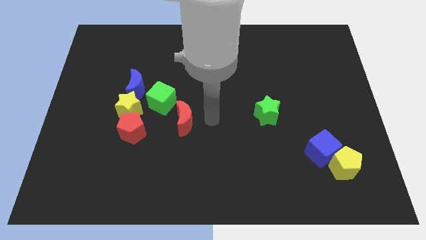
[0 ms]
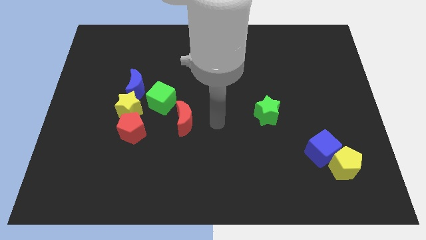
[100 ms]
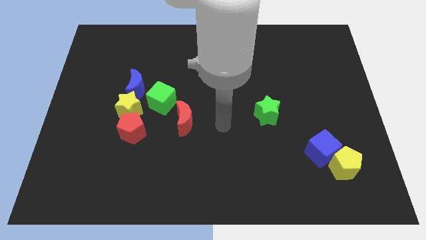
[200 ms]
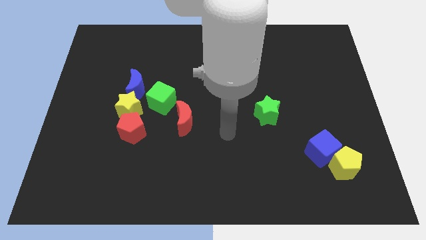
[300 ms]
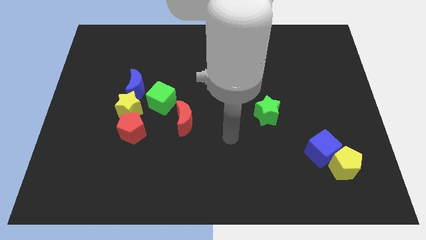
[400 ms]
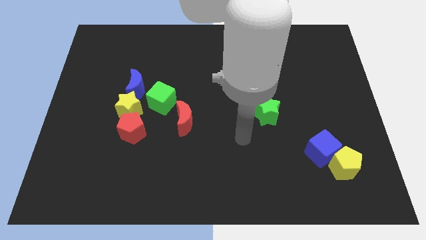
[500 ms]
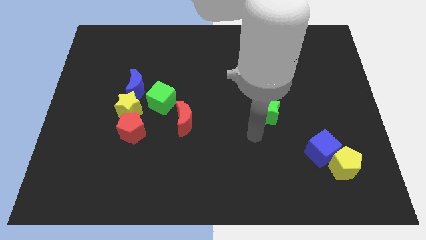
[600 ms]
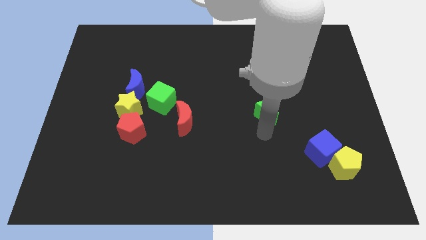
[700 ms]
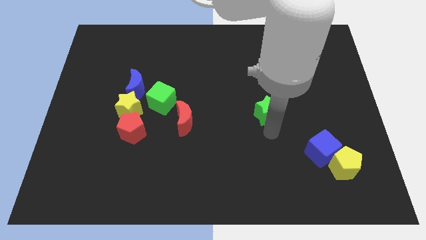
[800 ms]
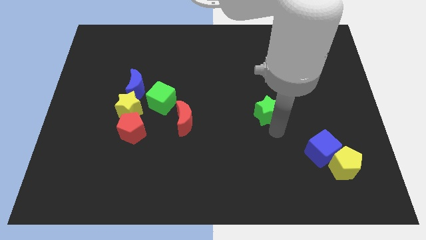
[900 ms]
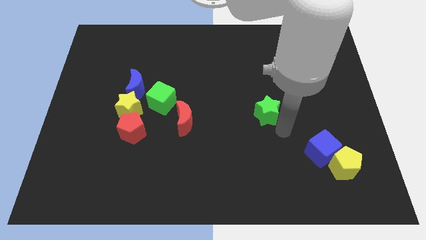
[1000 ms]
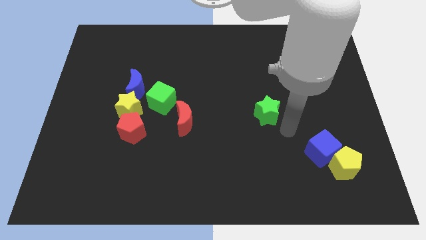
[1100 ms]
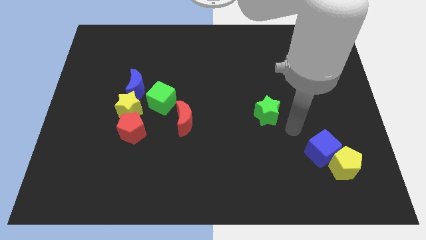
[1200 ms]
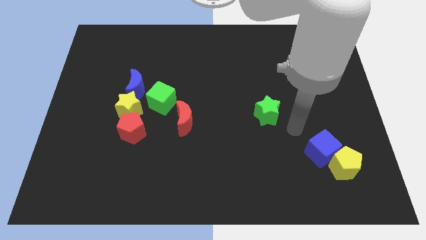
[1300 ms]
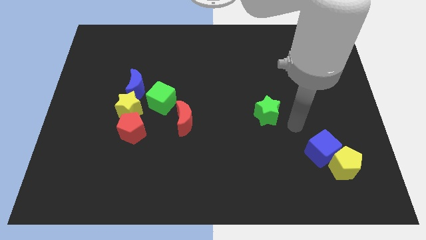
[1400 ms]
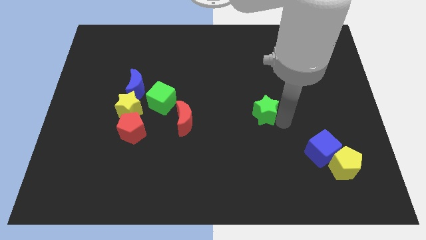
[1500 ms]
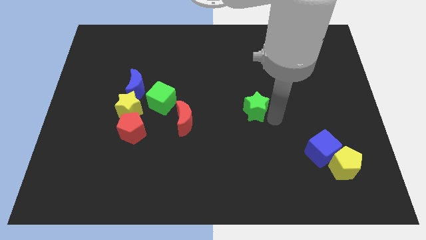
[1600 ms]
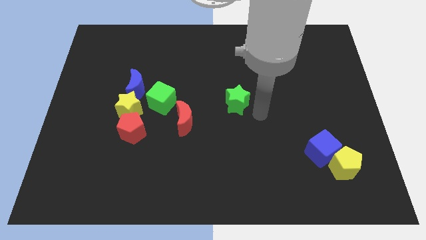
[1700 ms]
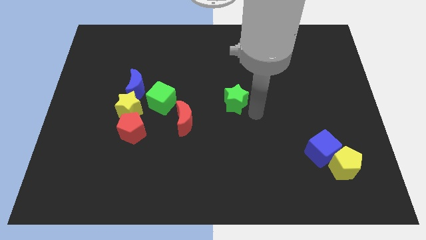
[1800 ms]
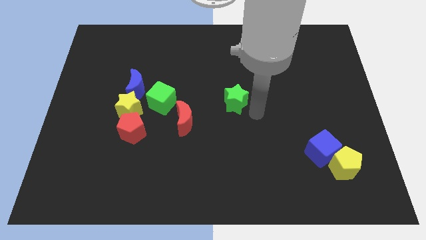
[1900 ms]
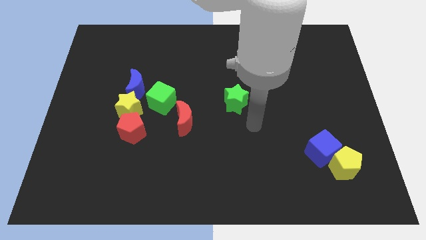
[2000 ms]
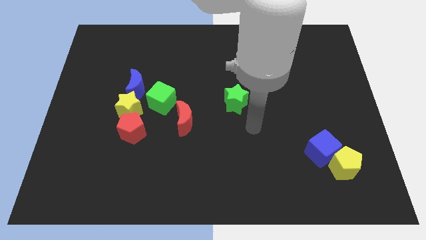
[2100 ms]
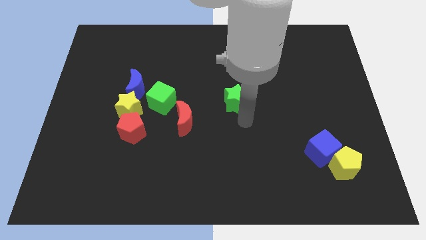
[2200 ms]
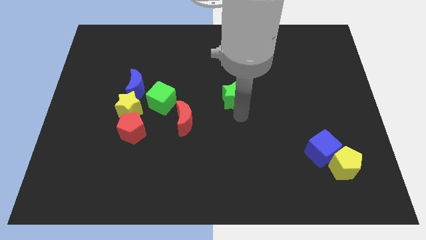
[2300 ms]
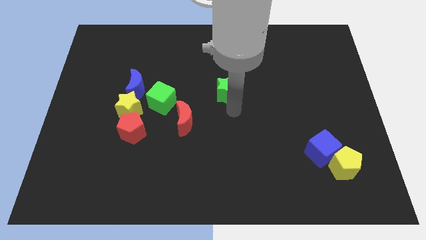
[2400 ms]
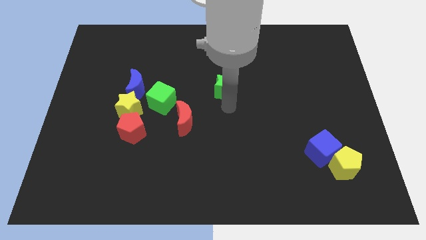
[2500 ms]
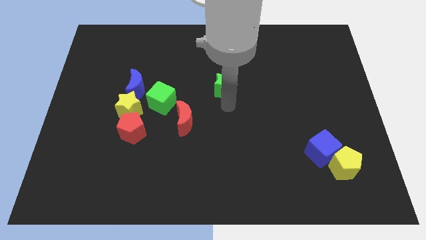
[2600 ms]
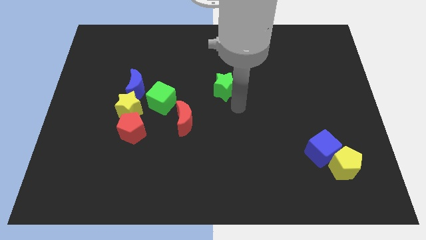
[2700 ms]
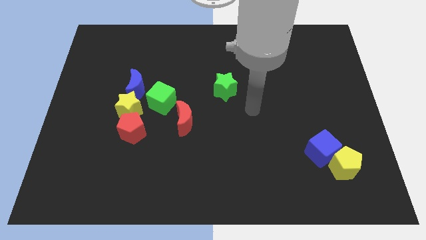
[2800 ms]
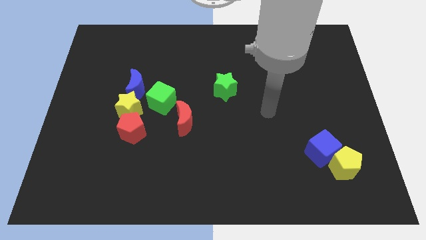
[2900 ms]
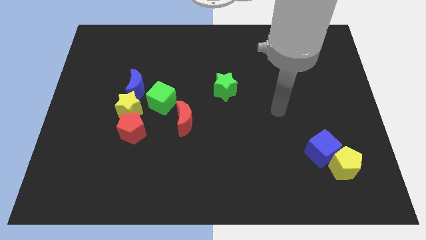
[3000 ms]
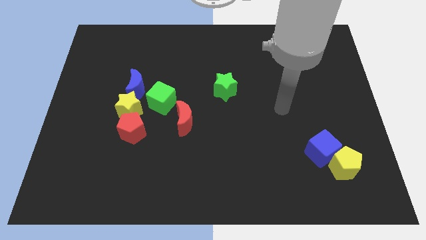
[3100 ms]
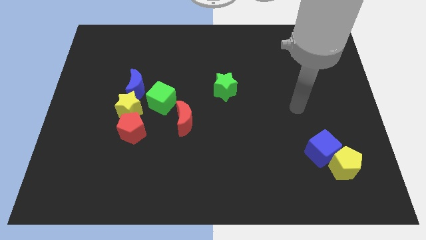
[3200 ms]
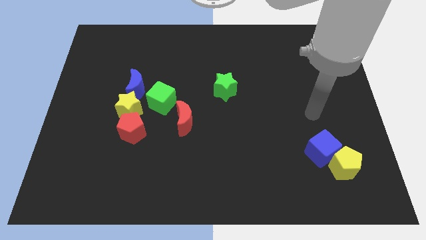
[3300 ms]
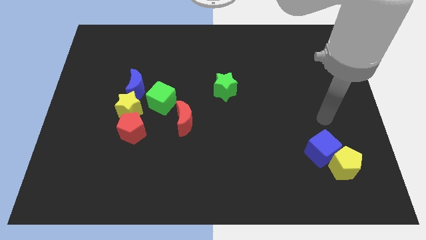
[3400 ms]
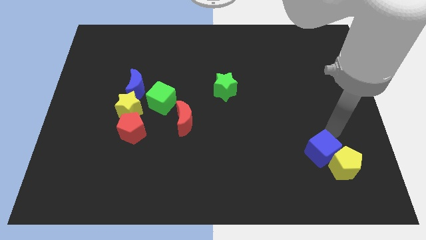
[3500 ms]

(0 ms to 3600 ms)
move the green star above the red crescent

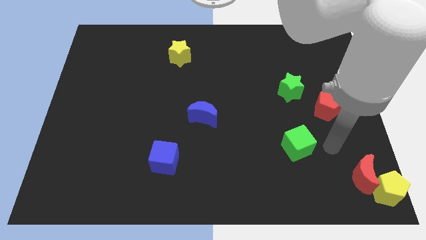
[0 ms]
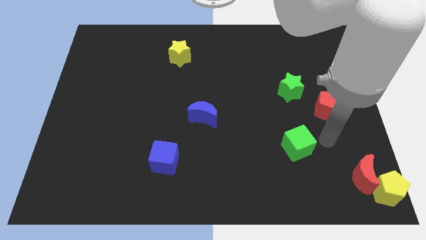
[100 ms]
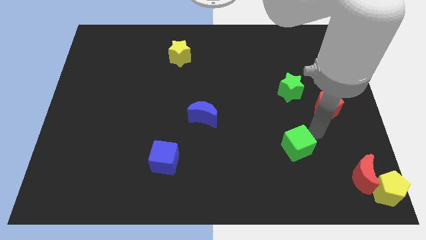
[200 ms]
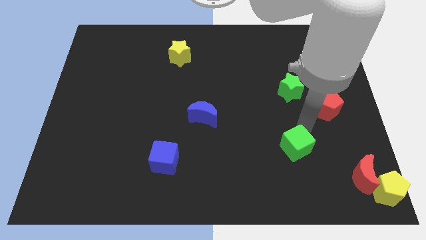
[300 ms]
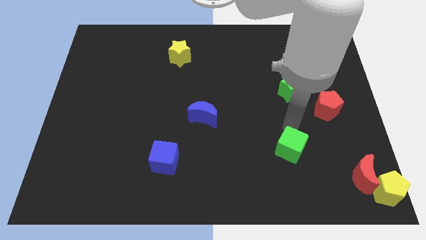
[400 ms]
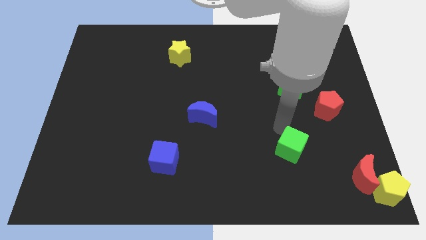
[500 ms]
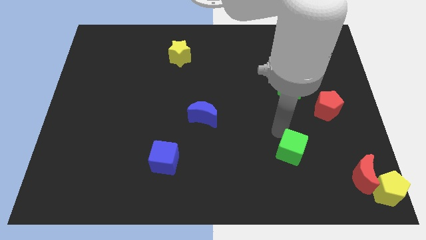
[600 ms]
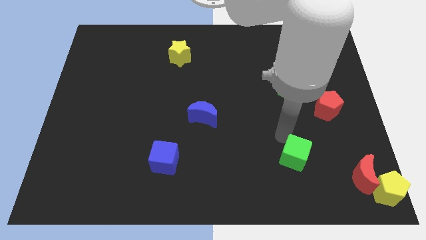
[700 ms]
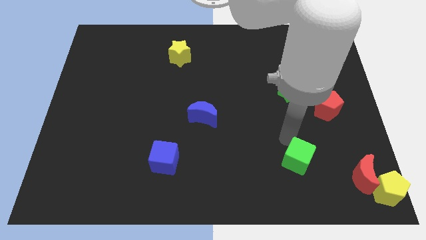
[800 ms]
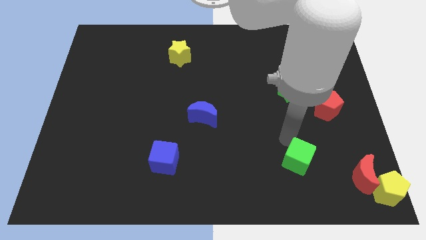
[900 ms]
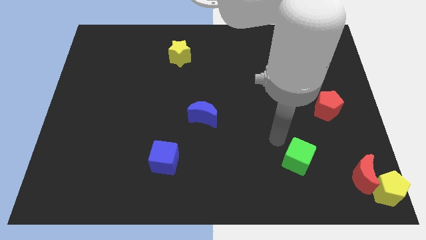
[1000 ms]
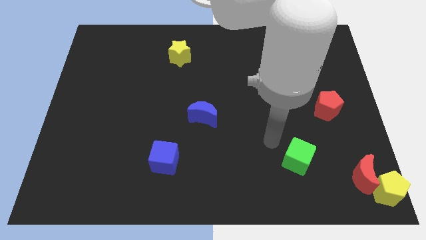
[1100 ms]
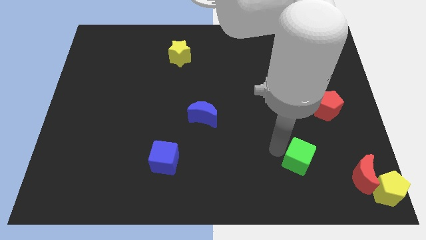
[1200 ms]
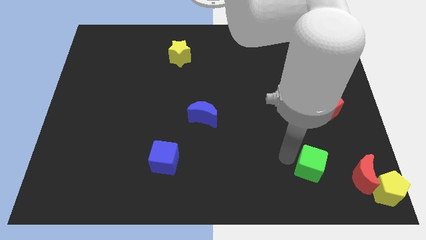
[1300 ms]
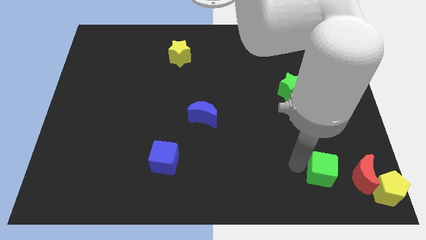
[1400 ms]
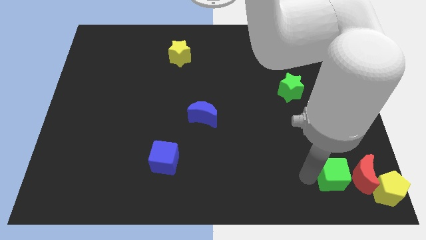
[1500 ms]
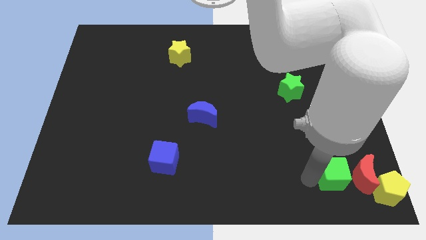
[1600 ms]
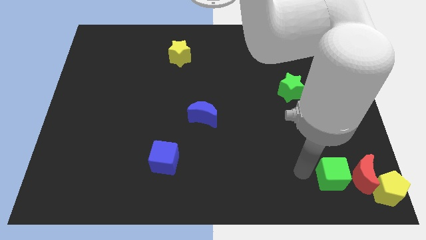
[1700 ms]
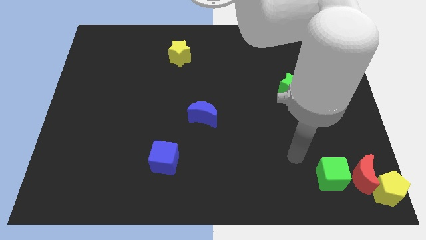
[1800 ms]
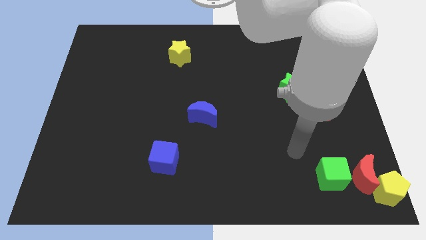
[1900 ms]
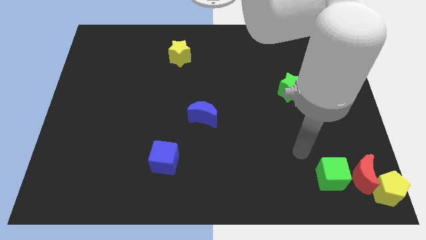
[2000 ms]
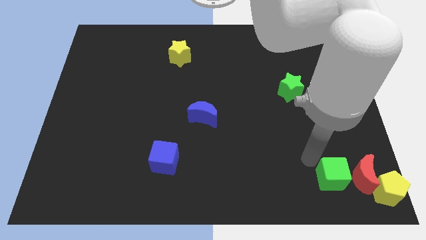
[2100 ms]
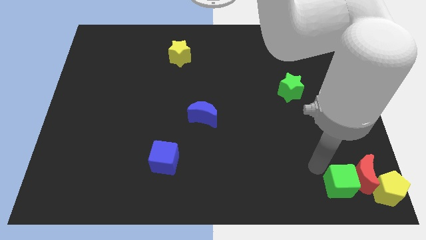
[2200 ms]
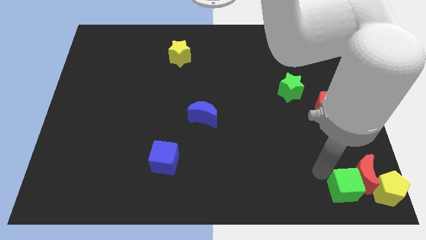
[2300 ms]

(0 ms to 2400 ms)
move the green cube to the left of the red crescent

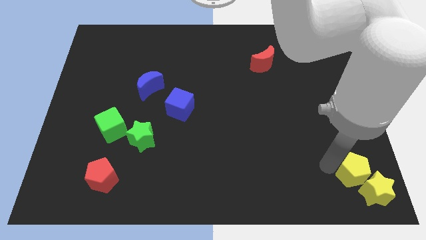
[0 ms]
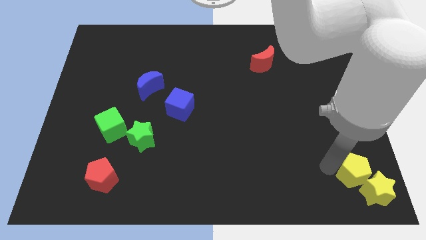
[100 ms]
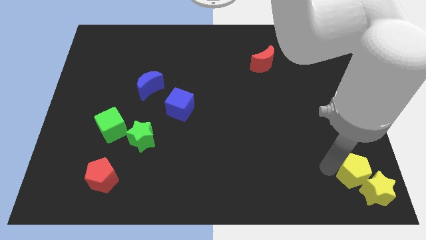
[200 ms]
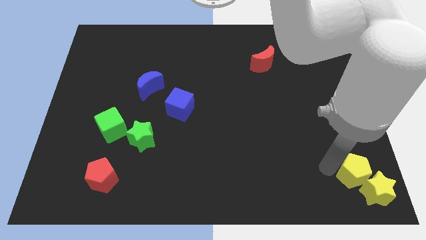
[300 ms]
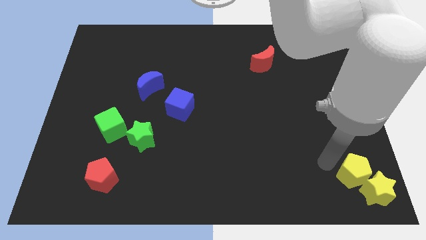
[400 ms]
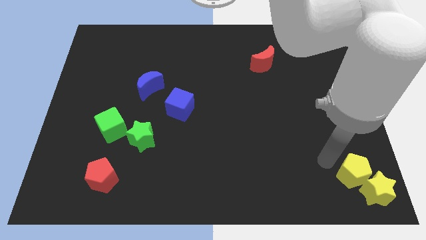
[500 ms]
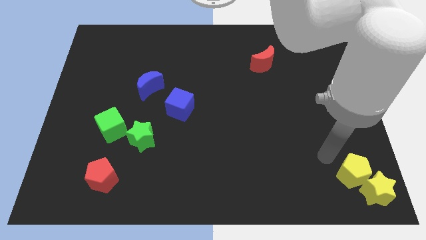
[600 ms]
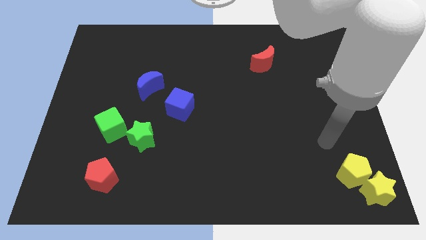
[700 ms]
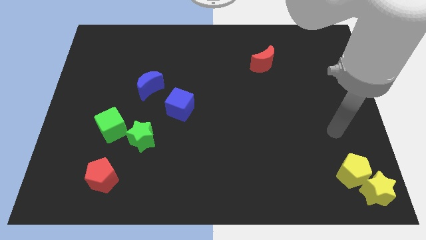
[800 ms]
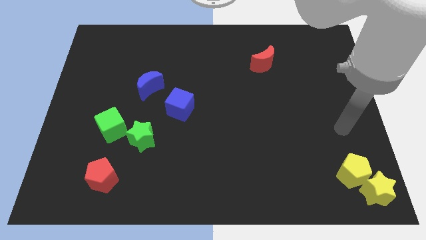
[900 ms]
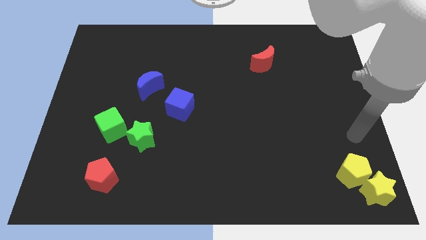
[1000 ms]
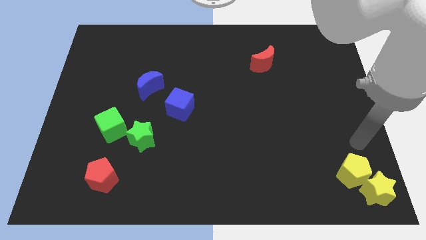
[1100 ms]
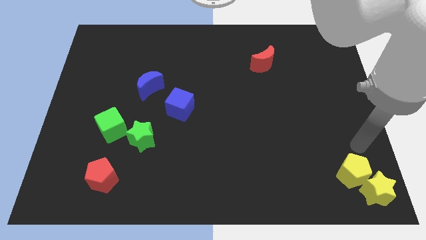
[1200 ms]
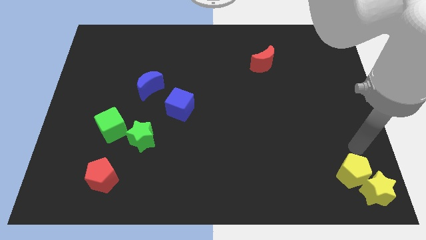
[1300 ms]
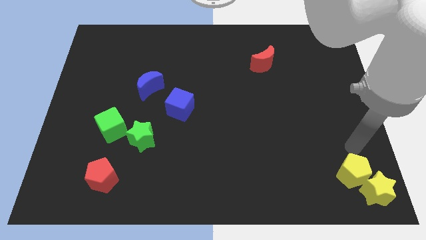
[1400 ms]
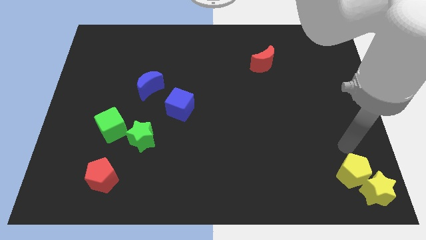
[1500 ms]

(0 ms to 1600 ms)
move your arm away from yellow block

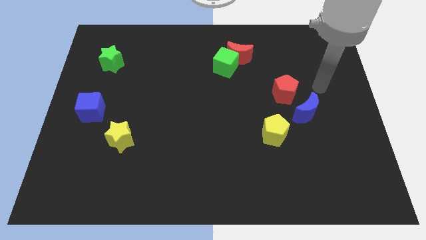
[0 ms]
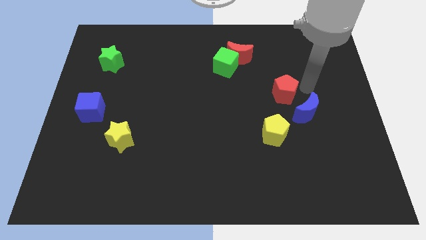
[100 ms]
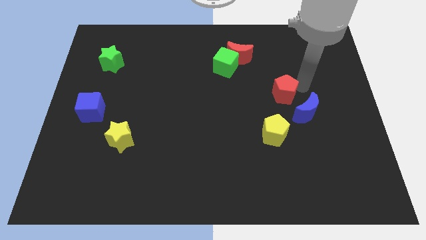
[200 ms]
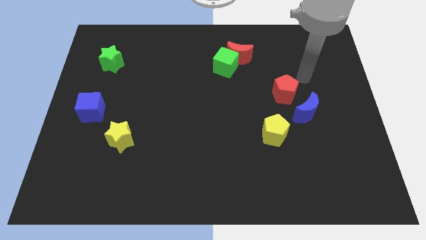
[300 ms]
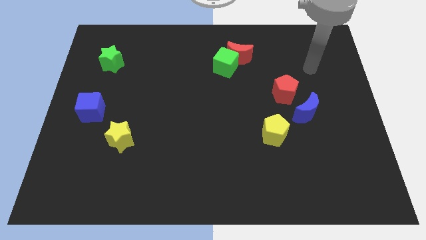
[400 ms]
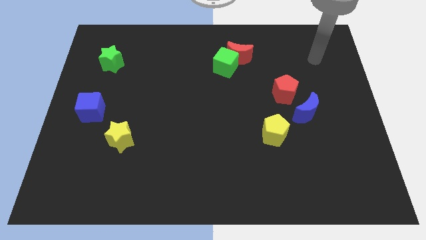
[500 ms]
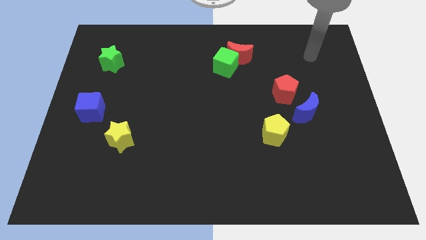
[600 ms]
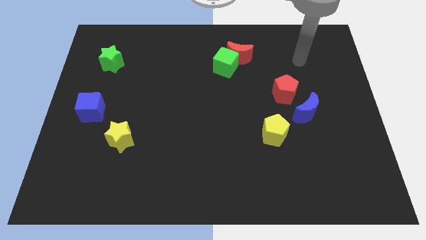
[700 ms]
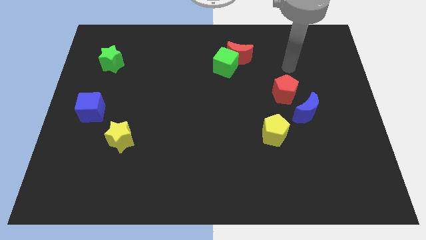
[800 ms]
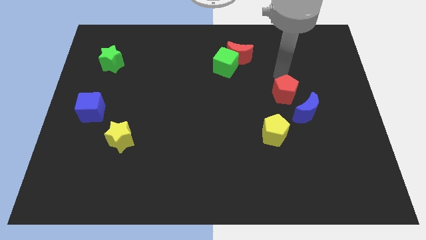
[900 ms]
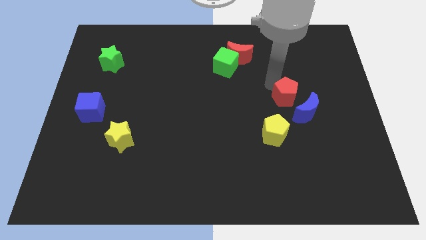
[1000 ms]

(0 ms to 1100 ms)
move your arm to the top of the red pentagon

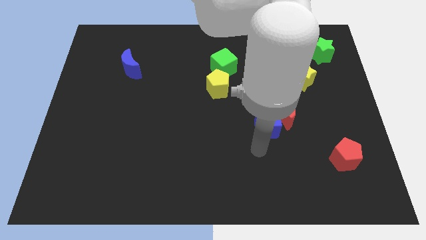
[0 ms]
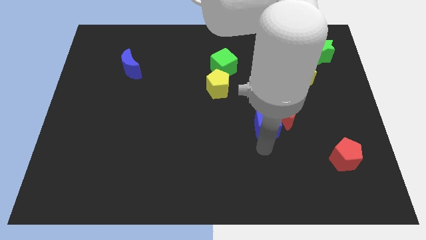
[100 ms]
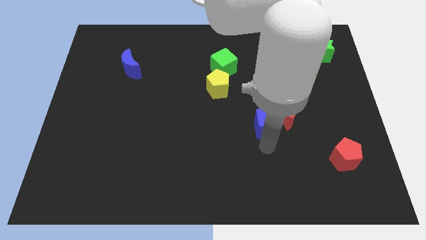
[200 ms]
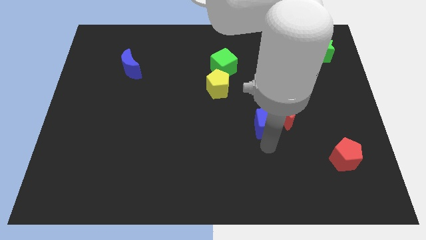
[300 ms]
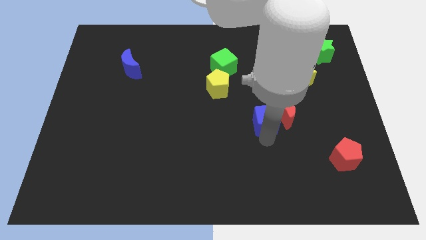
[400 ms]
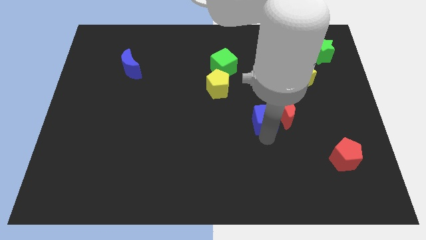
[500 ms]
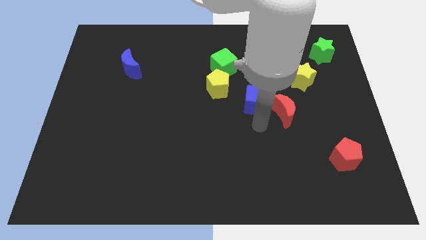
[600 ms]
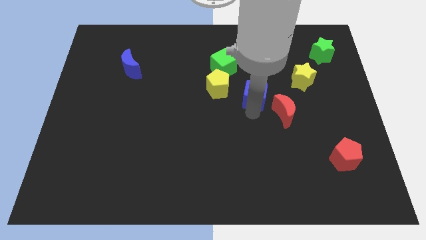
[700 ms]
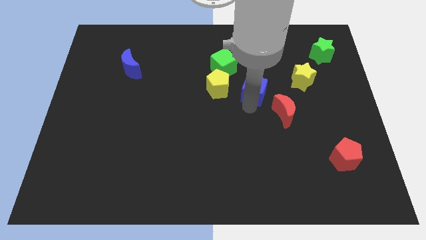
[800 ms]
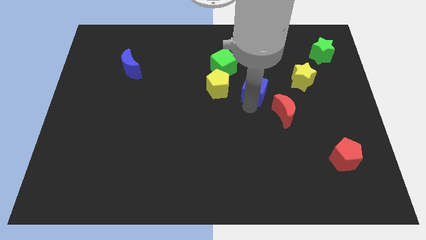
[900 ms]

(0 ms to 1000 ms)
separate the blue cube from the red crescent
